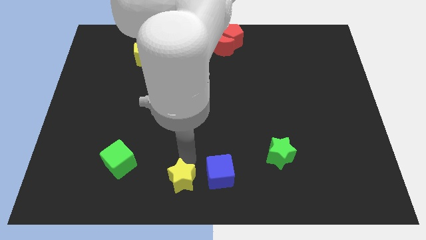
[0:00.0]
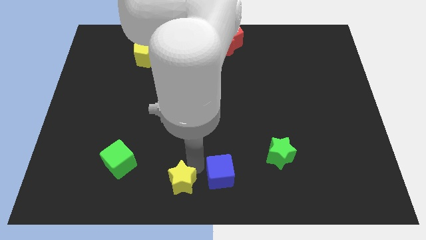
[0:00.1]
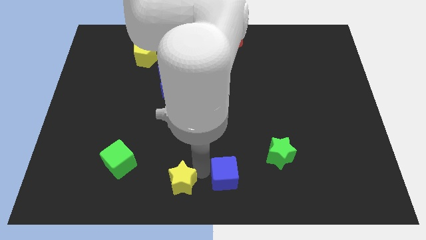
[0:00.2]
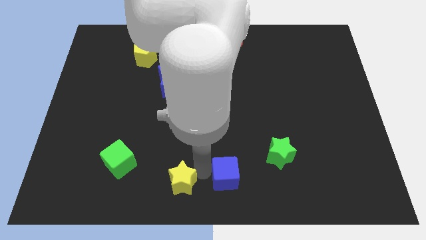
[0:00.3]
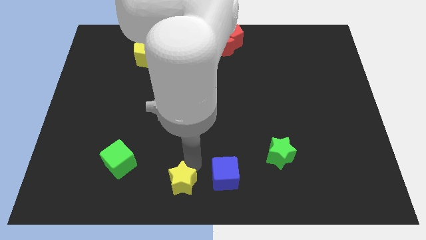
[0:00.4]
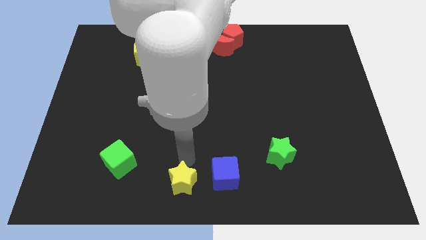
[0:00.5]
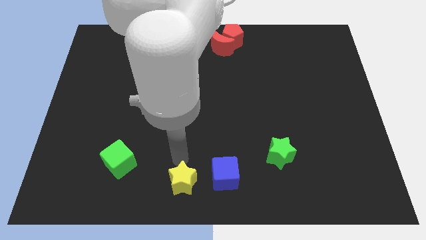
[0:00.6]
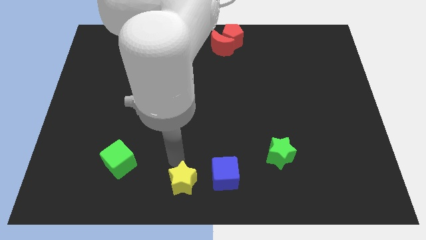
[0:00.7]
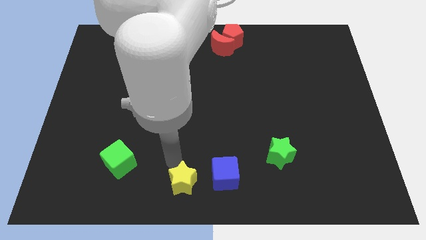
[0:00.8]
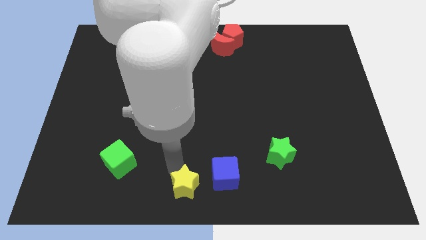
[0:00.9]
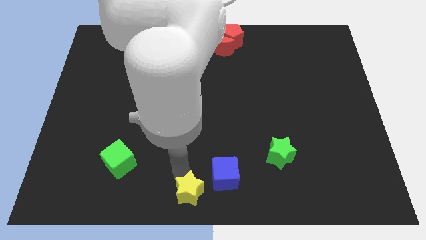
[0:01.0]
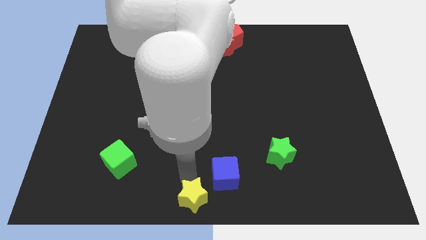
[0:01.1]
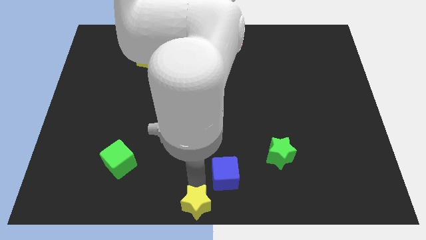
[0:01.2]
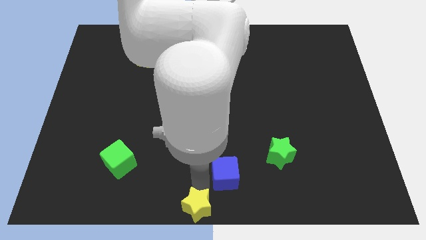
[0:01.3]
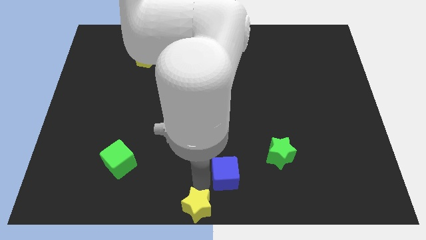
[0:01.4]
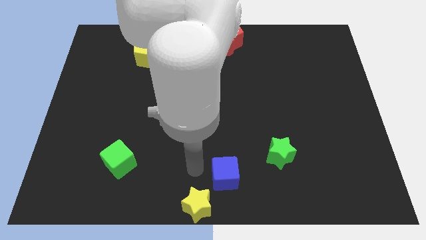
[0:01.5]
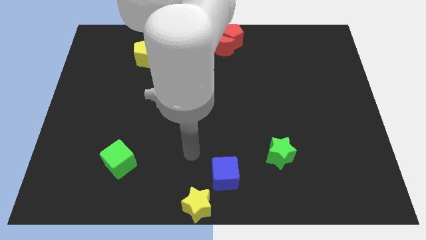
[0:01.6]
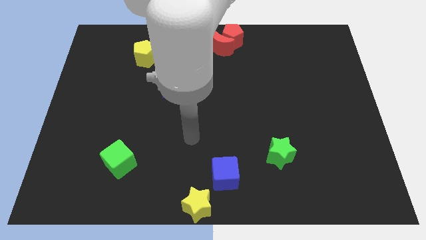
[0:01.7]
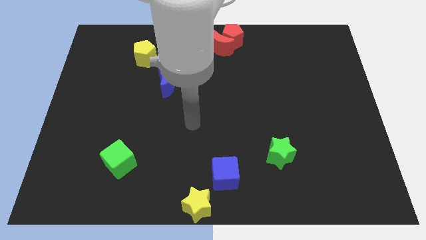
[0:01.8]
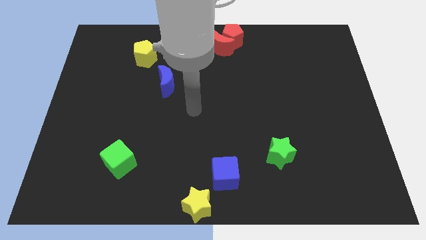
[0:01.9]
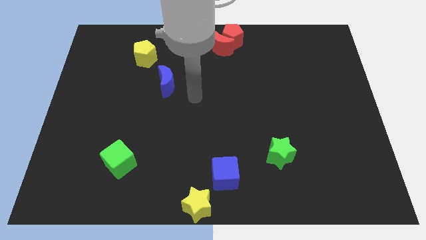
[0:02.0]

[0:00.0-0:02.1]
move the yellow star towards the bottom center of the board

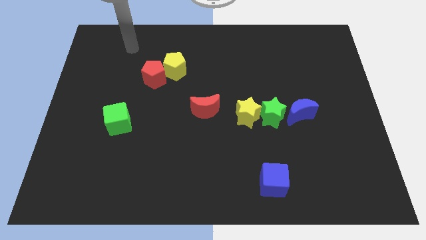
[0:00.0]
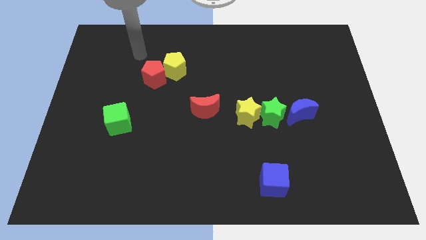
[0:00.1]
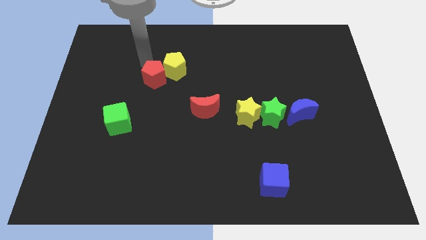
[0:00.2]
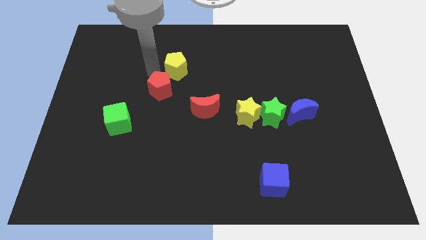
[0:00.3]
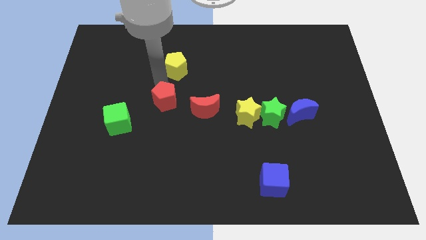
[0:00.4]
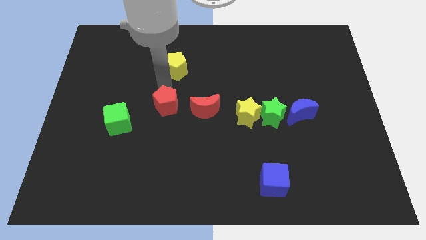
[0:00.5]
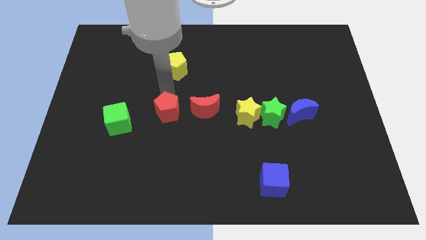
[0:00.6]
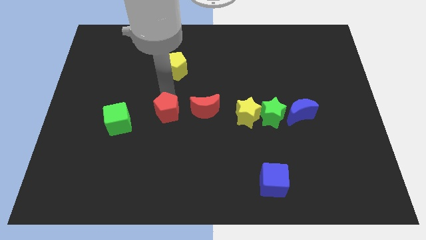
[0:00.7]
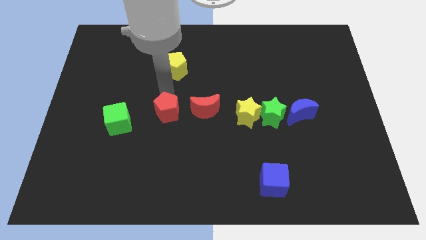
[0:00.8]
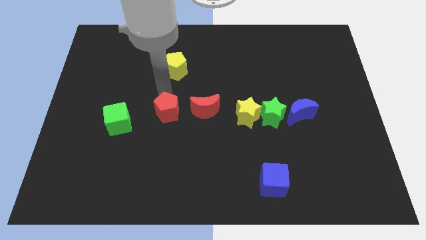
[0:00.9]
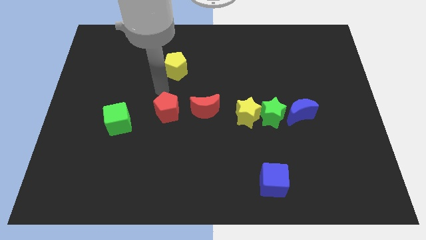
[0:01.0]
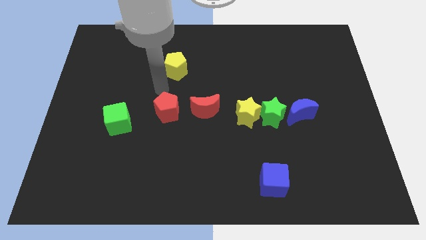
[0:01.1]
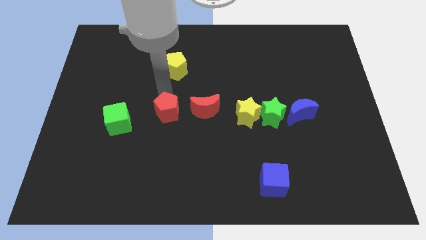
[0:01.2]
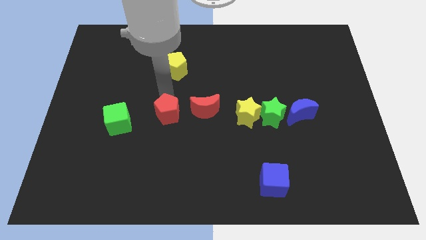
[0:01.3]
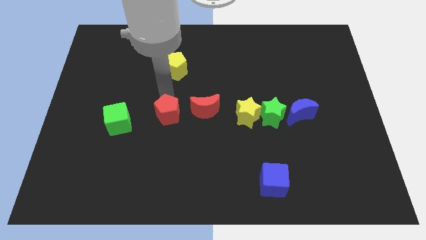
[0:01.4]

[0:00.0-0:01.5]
place the red pentagon below the yellow pentagon

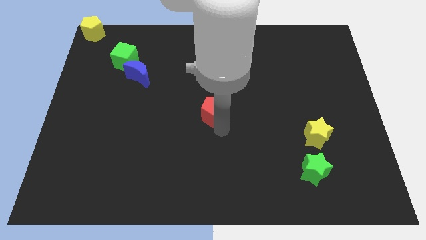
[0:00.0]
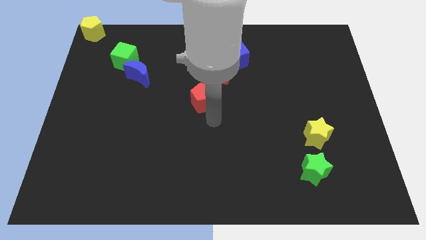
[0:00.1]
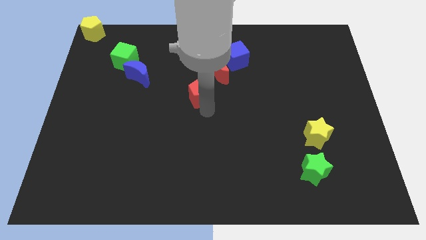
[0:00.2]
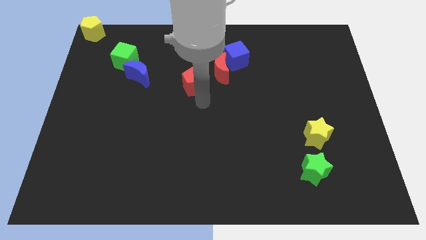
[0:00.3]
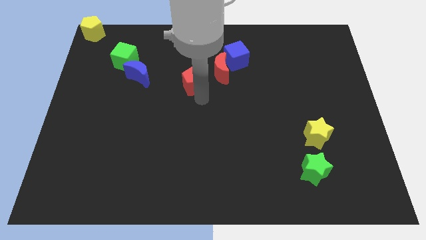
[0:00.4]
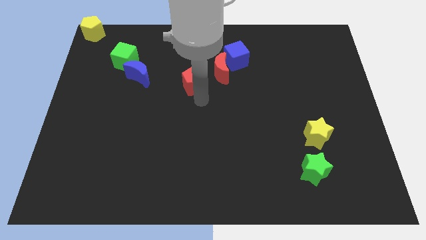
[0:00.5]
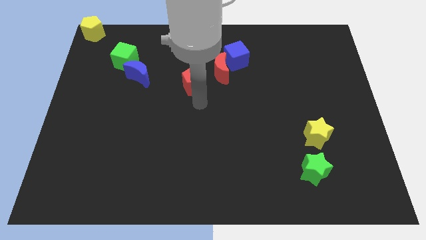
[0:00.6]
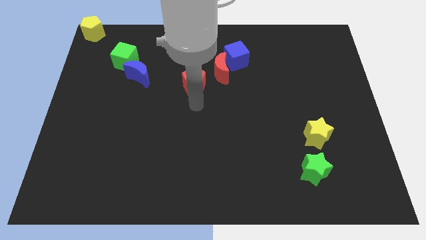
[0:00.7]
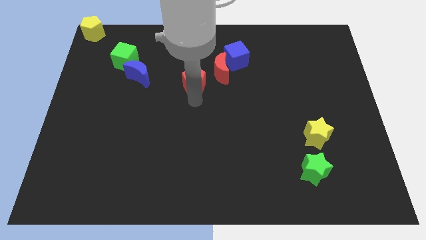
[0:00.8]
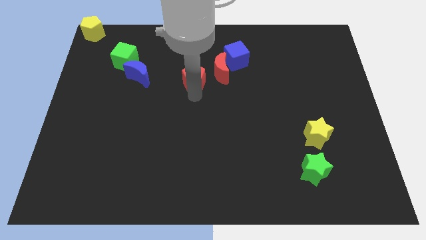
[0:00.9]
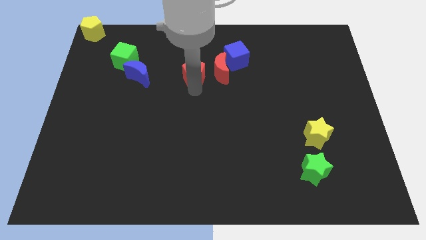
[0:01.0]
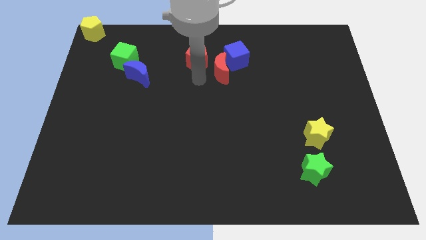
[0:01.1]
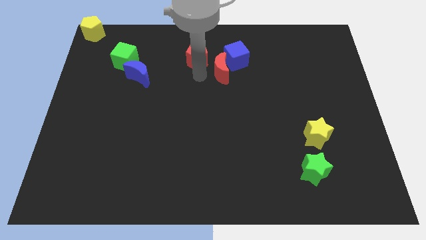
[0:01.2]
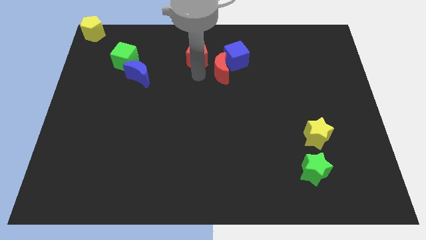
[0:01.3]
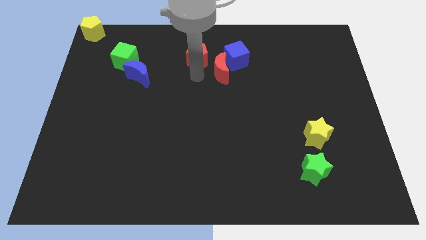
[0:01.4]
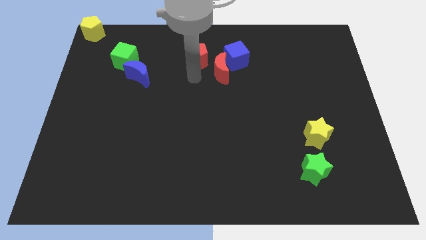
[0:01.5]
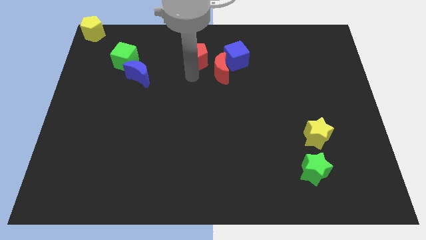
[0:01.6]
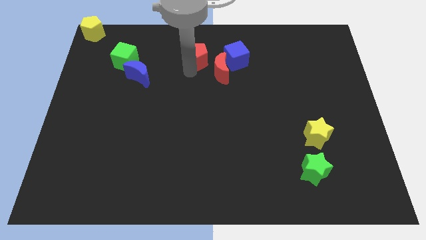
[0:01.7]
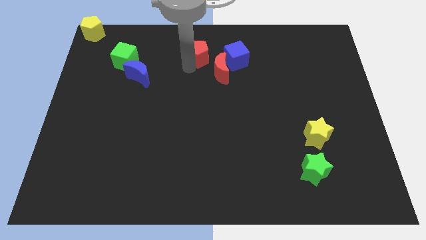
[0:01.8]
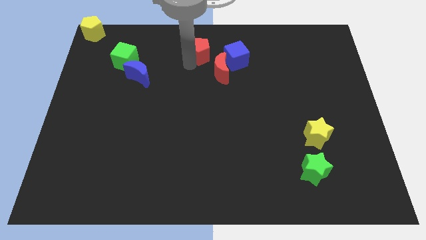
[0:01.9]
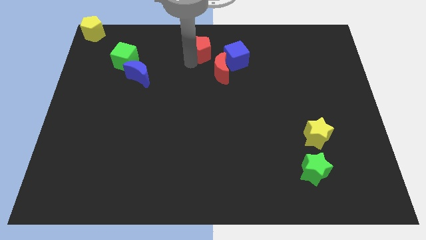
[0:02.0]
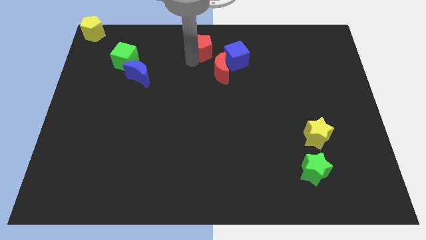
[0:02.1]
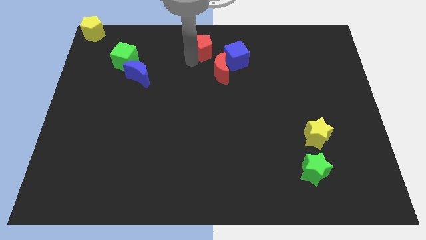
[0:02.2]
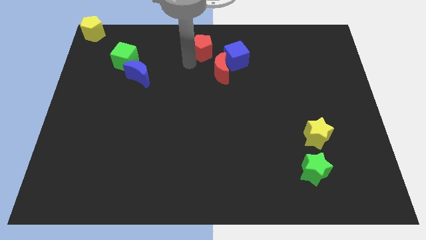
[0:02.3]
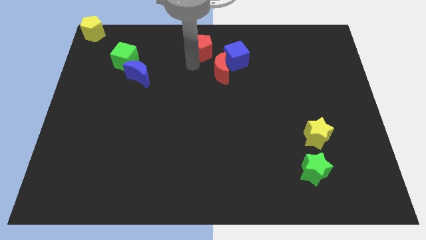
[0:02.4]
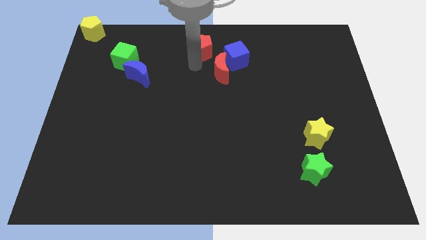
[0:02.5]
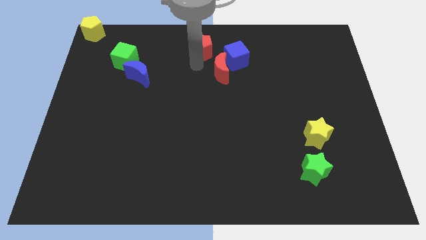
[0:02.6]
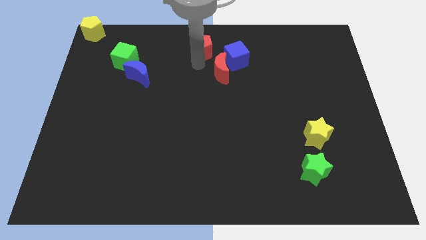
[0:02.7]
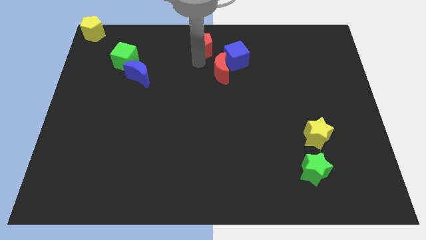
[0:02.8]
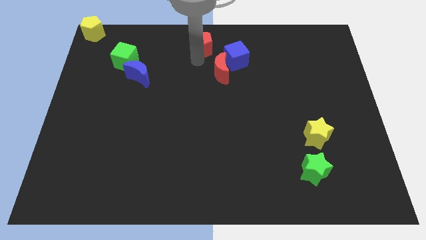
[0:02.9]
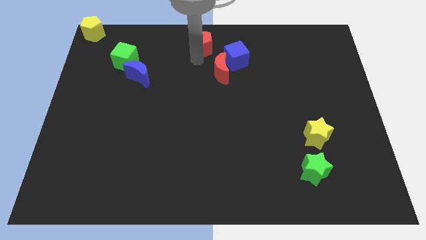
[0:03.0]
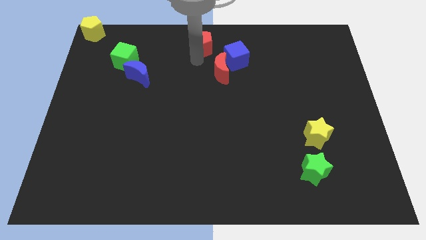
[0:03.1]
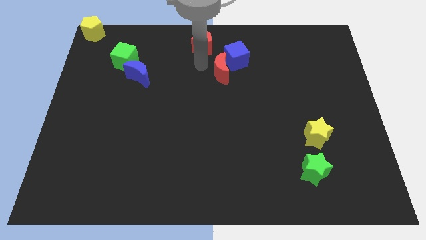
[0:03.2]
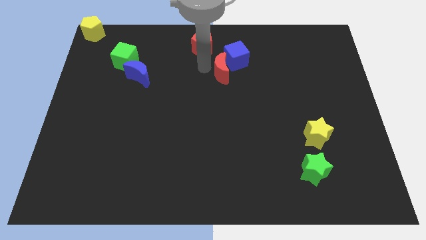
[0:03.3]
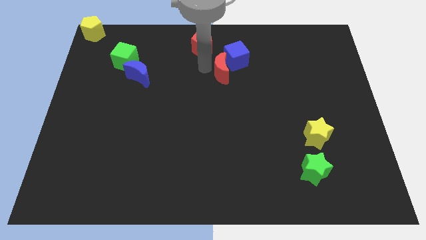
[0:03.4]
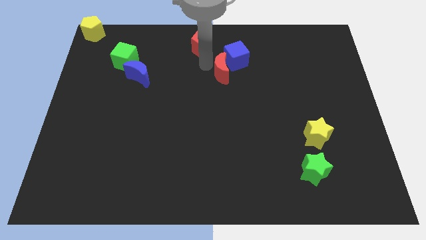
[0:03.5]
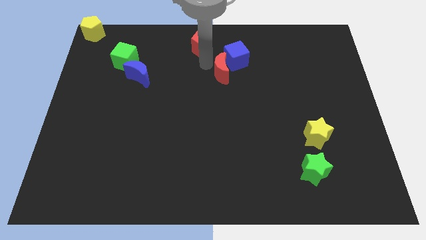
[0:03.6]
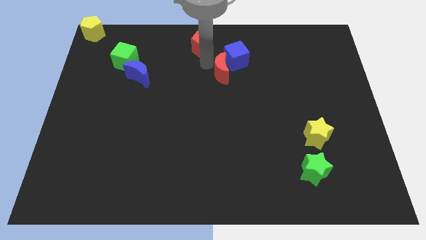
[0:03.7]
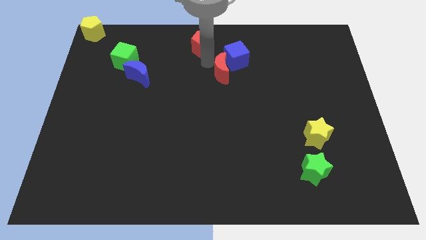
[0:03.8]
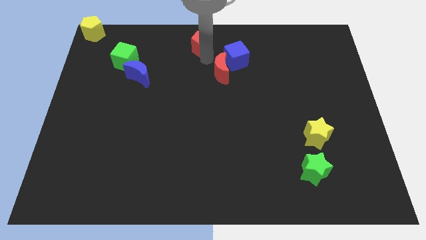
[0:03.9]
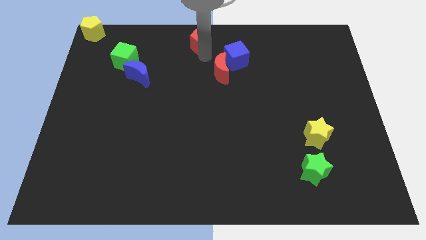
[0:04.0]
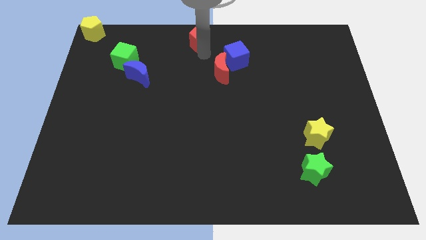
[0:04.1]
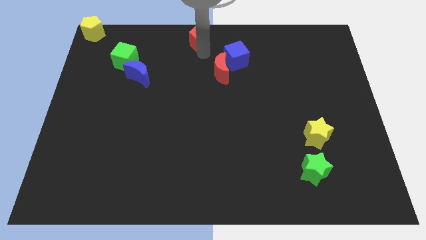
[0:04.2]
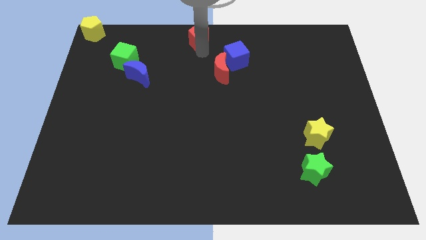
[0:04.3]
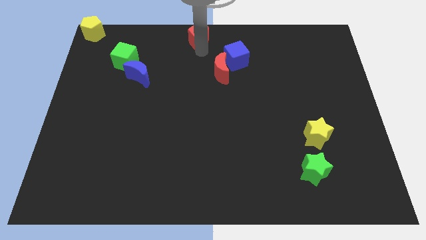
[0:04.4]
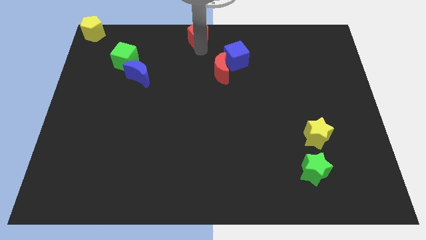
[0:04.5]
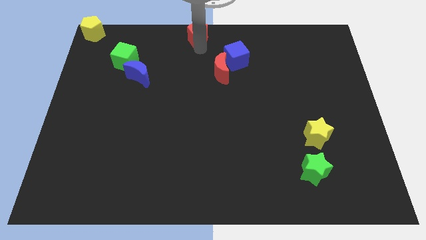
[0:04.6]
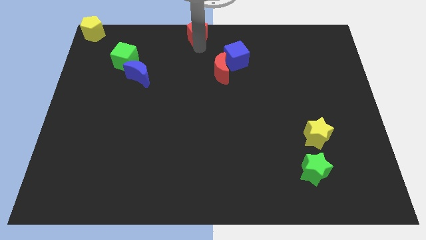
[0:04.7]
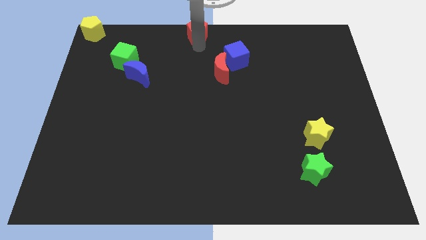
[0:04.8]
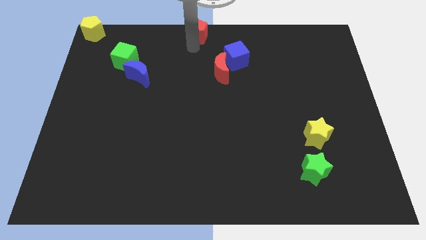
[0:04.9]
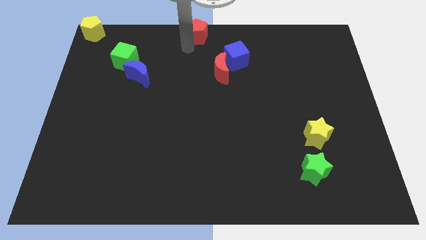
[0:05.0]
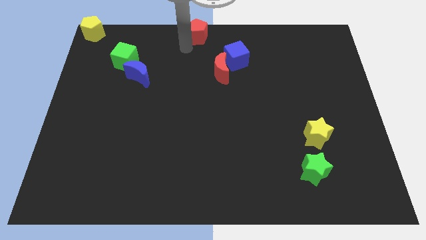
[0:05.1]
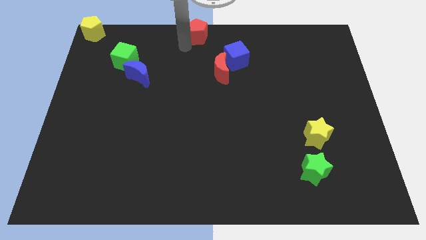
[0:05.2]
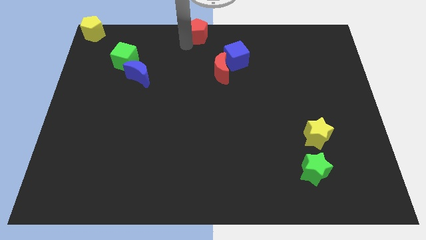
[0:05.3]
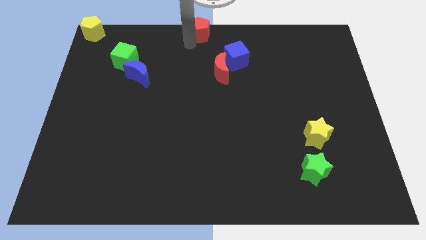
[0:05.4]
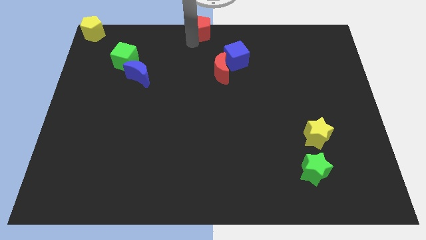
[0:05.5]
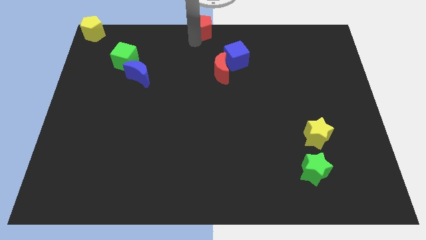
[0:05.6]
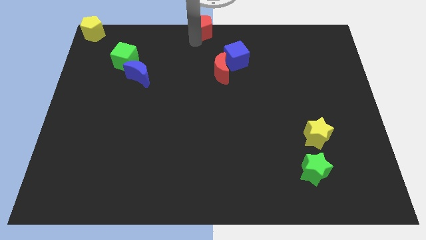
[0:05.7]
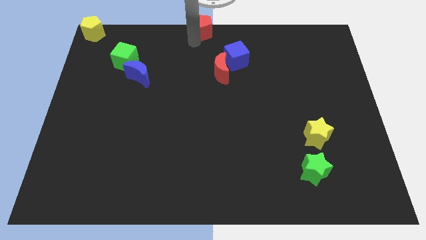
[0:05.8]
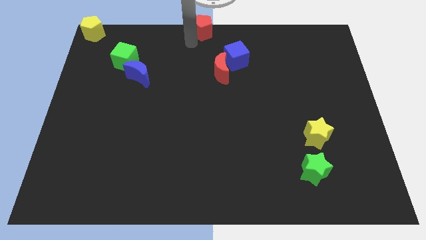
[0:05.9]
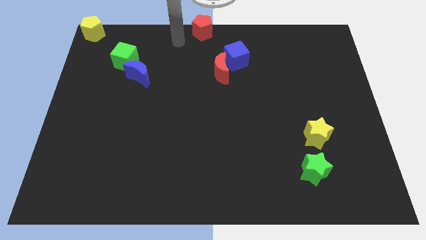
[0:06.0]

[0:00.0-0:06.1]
push the red pentagon at the top center of the board
